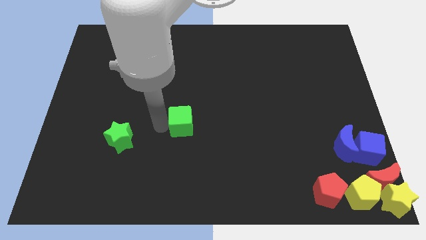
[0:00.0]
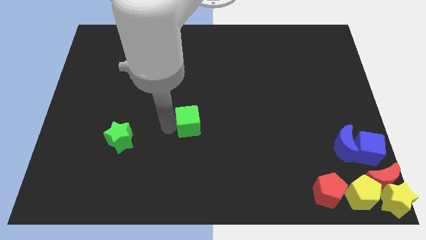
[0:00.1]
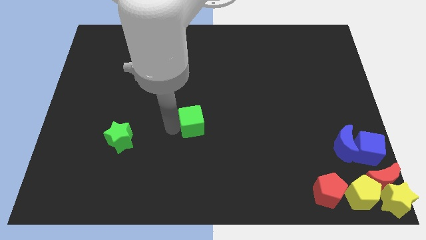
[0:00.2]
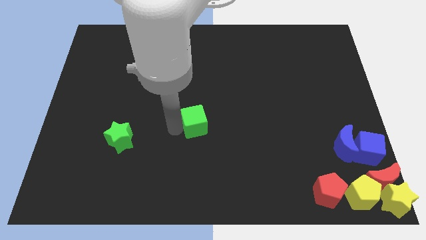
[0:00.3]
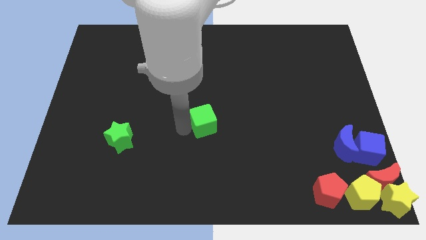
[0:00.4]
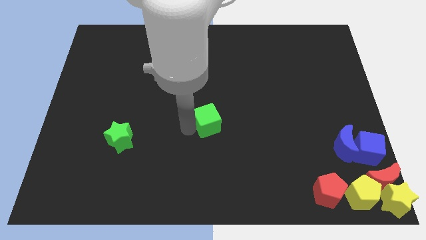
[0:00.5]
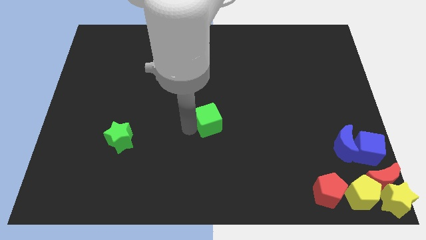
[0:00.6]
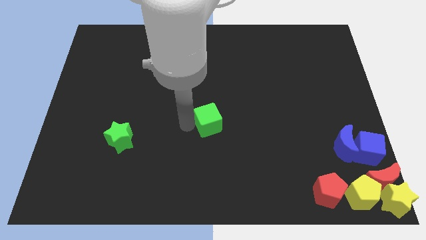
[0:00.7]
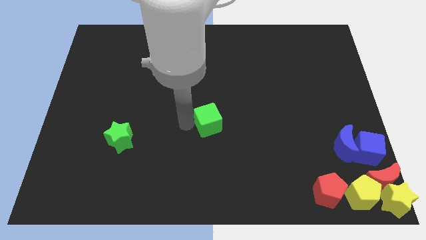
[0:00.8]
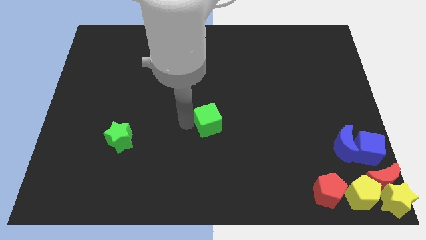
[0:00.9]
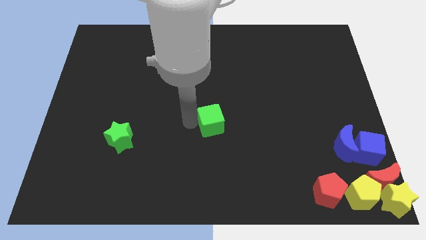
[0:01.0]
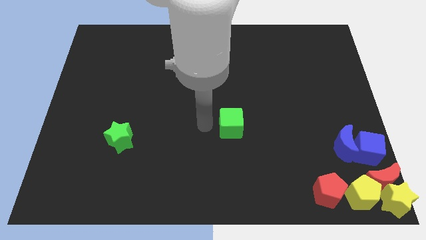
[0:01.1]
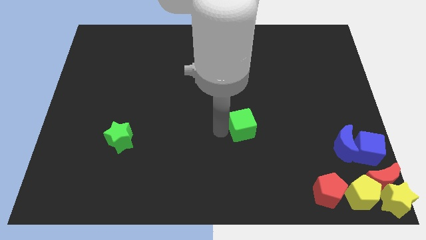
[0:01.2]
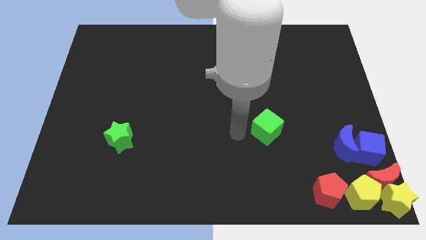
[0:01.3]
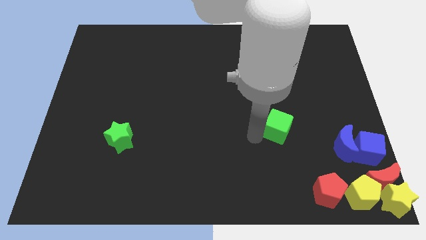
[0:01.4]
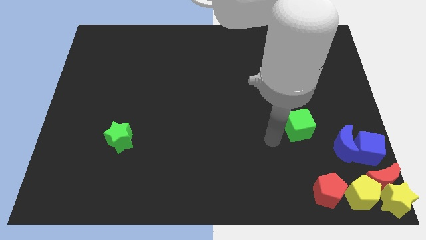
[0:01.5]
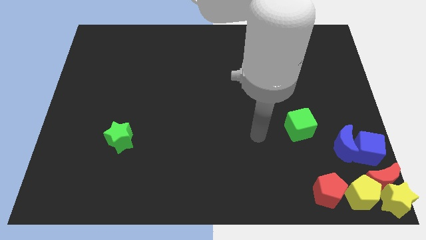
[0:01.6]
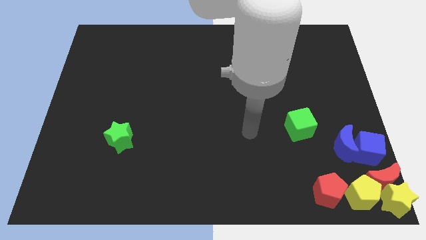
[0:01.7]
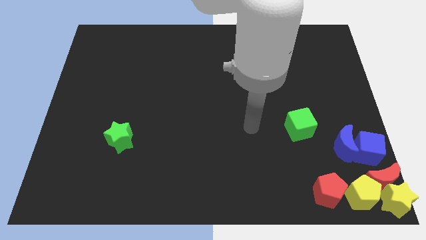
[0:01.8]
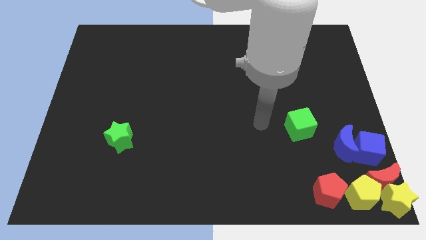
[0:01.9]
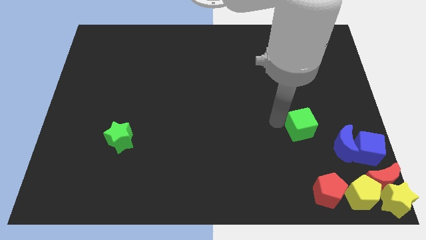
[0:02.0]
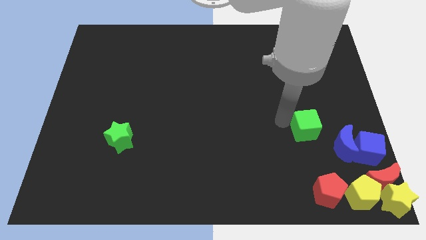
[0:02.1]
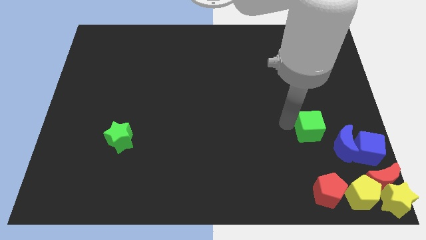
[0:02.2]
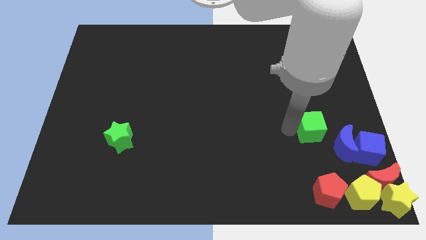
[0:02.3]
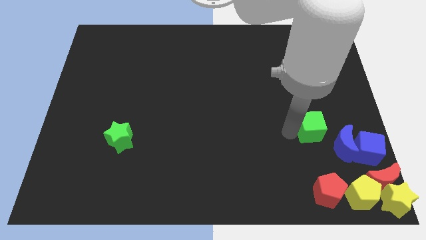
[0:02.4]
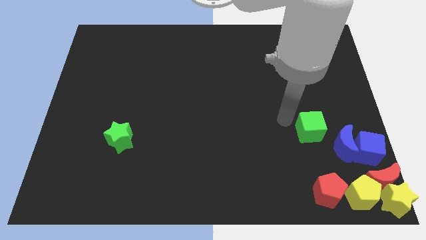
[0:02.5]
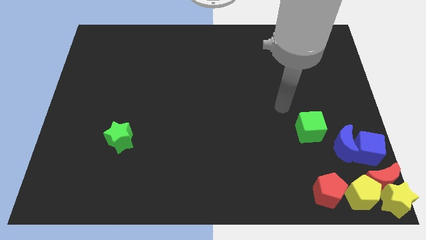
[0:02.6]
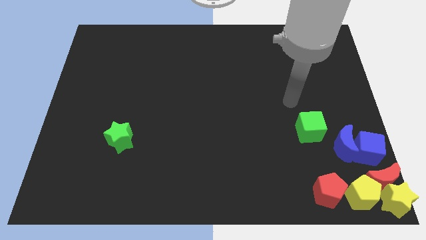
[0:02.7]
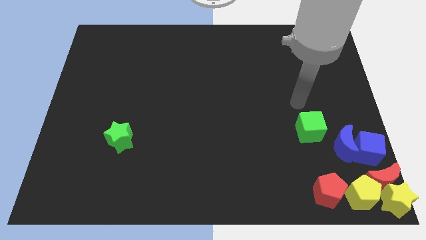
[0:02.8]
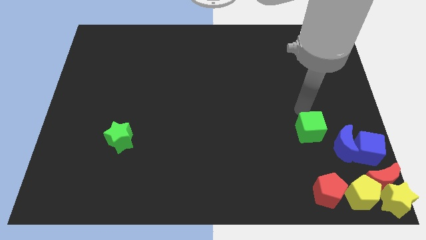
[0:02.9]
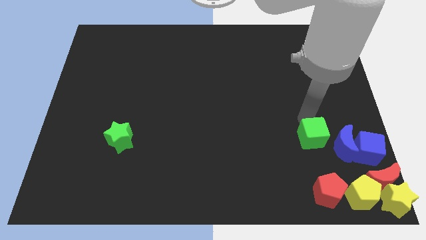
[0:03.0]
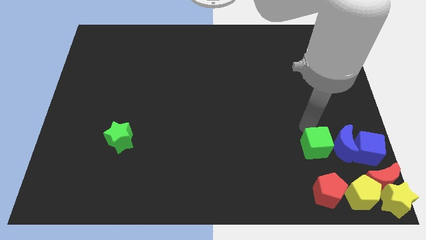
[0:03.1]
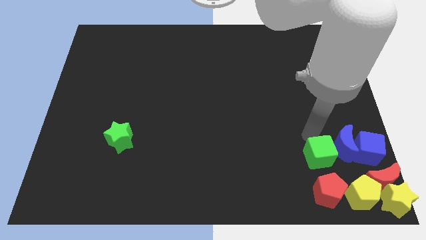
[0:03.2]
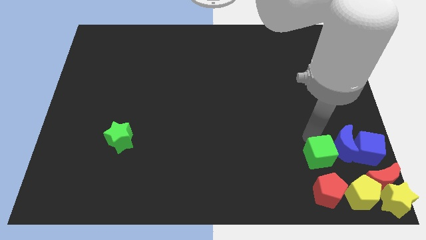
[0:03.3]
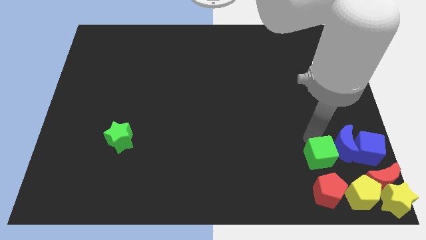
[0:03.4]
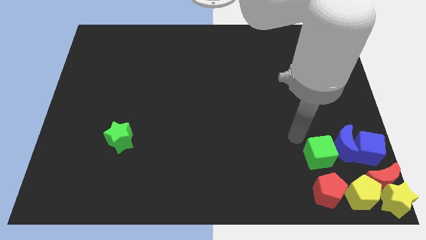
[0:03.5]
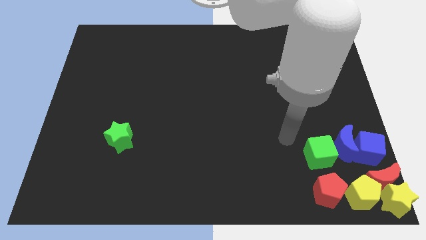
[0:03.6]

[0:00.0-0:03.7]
place the green cube to the top of the red pentagon

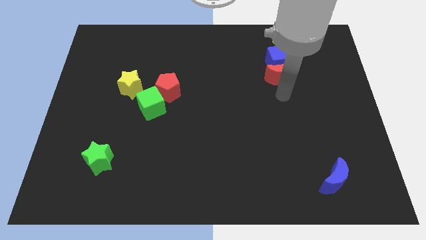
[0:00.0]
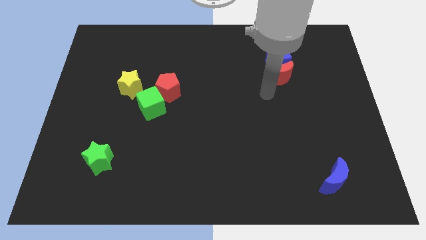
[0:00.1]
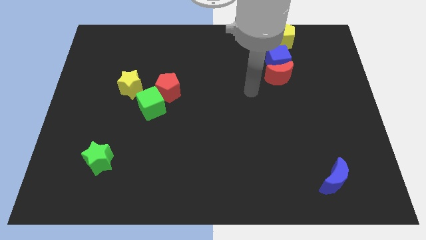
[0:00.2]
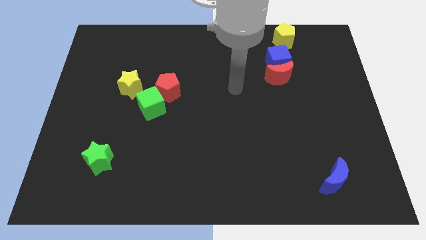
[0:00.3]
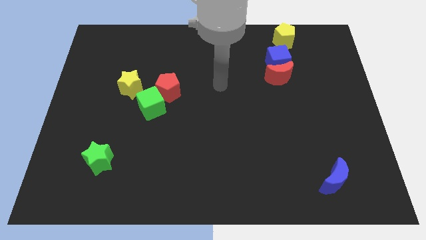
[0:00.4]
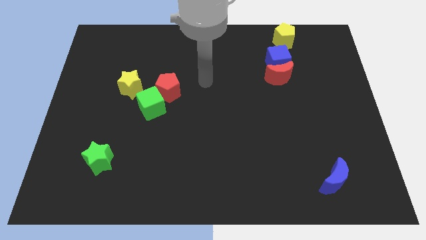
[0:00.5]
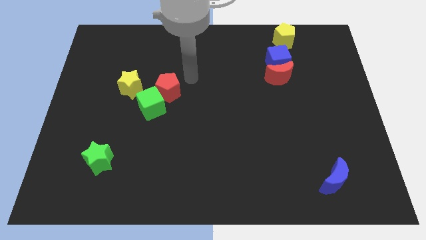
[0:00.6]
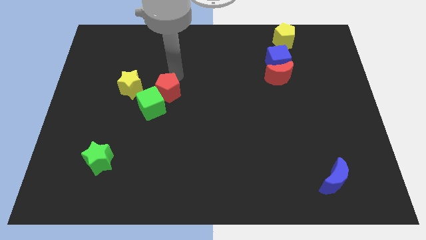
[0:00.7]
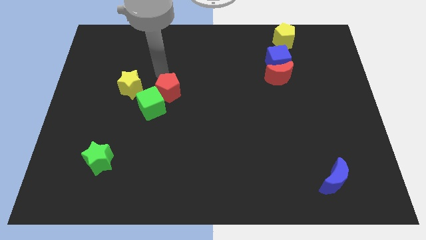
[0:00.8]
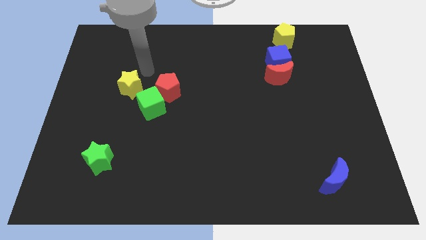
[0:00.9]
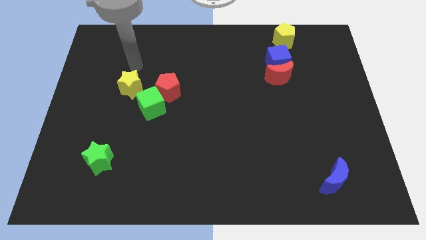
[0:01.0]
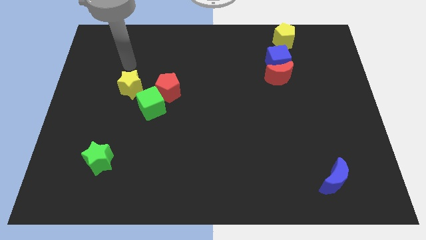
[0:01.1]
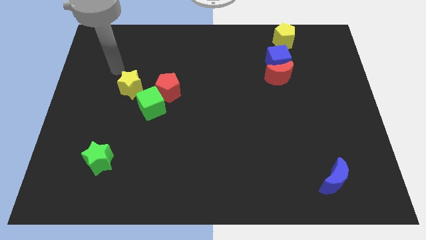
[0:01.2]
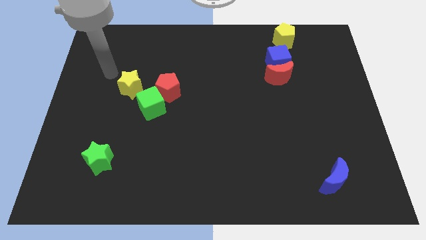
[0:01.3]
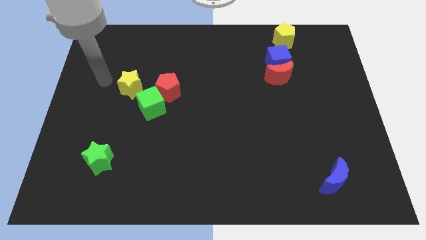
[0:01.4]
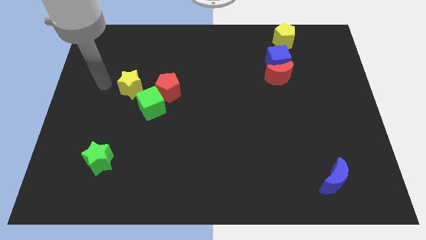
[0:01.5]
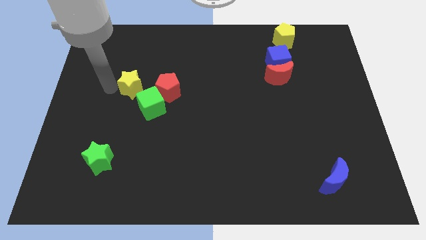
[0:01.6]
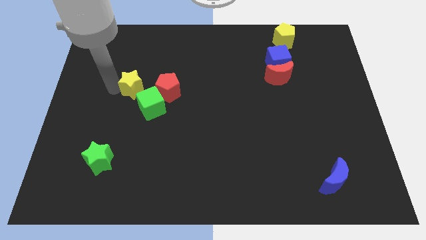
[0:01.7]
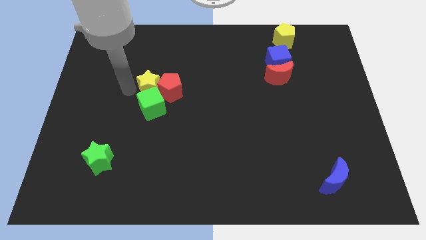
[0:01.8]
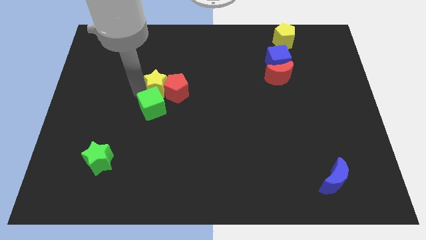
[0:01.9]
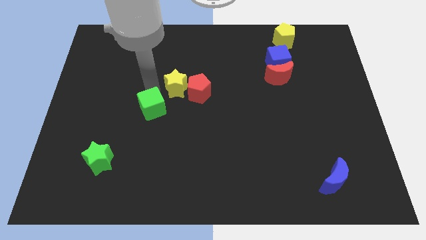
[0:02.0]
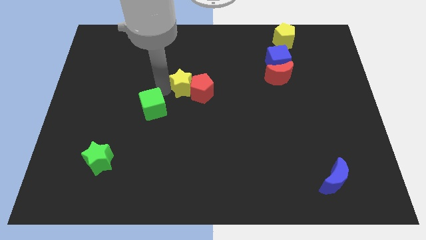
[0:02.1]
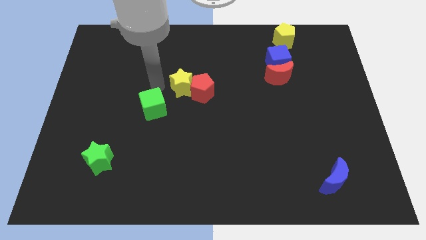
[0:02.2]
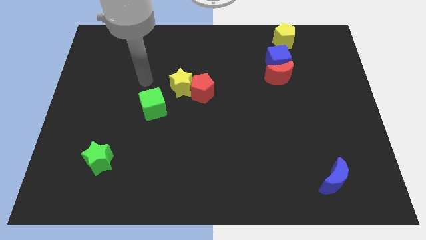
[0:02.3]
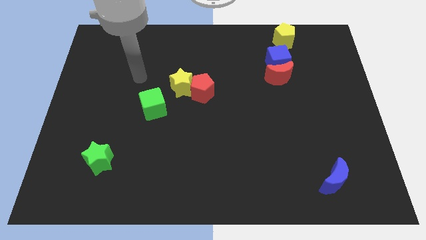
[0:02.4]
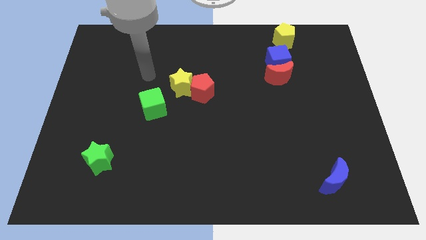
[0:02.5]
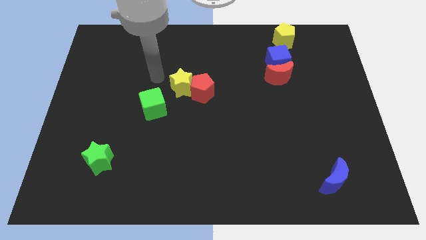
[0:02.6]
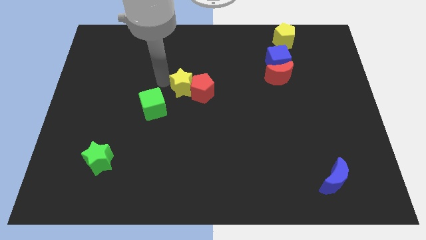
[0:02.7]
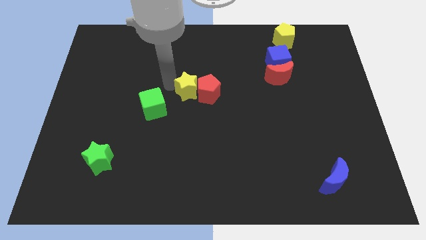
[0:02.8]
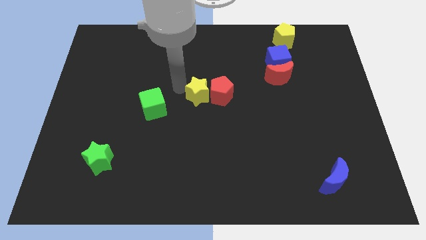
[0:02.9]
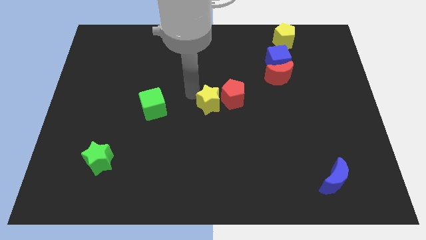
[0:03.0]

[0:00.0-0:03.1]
place the yellow star right to the green cube

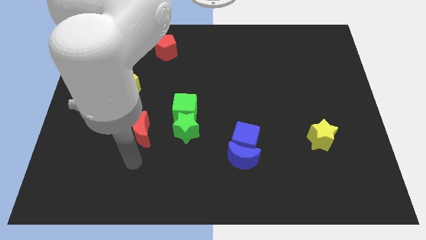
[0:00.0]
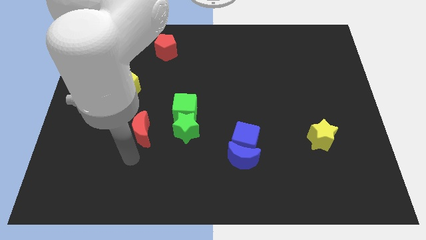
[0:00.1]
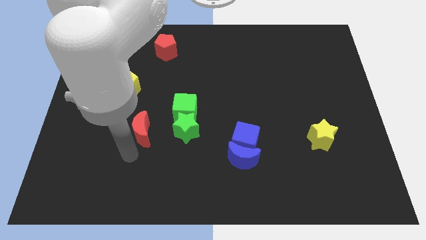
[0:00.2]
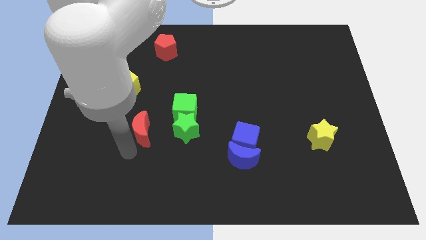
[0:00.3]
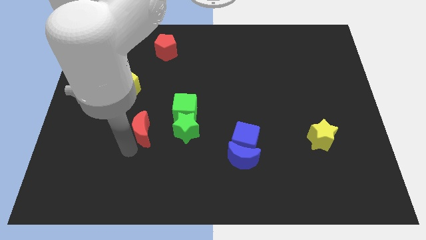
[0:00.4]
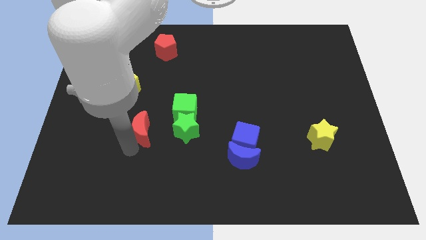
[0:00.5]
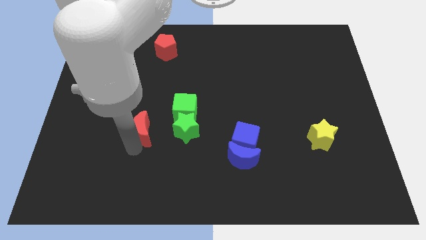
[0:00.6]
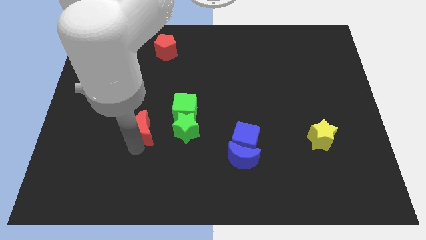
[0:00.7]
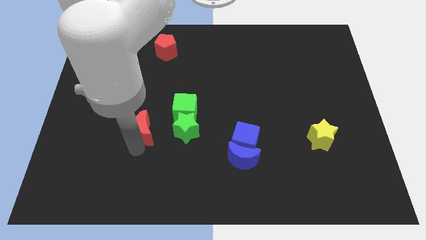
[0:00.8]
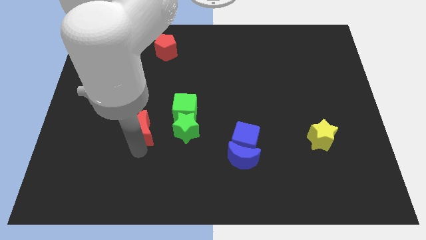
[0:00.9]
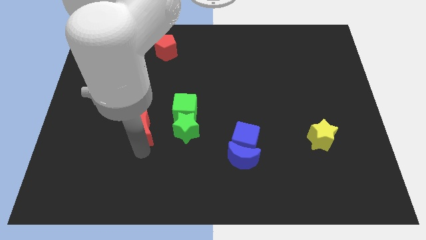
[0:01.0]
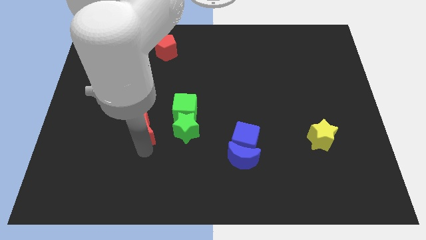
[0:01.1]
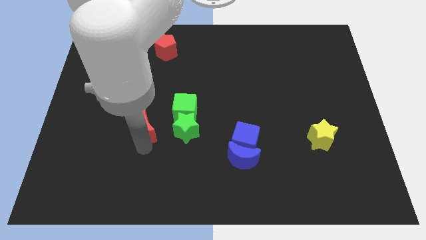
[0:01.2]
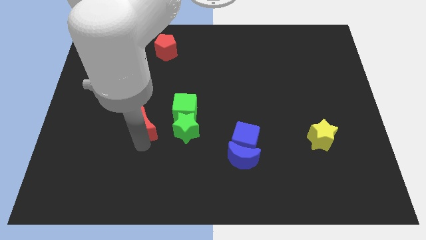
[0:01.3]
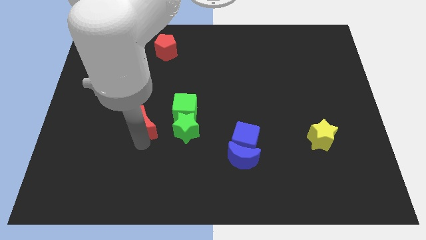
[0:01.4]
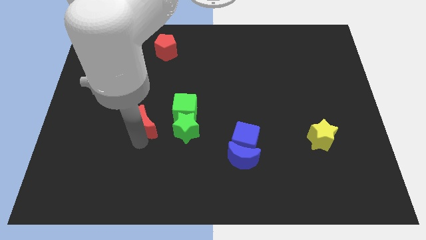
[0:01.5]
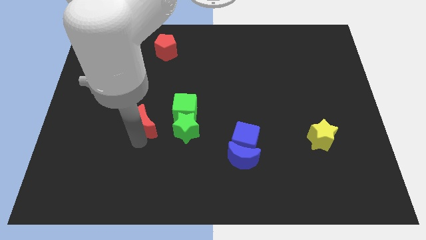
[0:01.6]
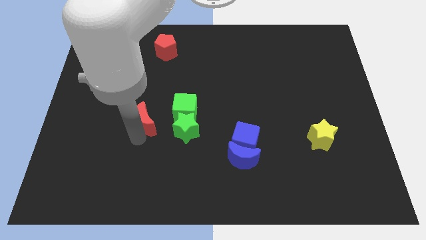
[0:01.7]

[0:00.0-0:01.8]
slightly push the red crescent towards upside

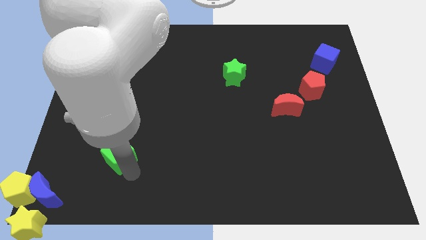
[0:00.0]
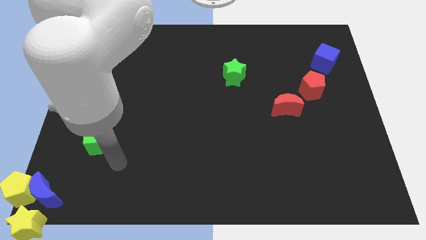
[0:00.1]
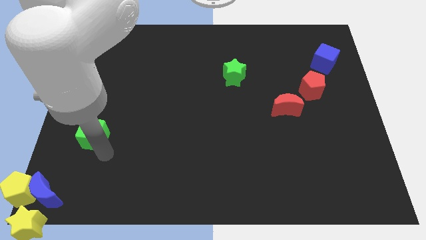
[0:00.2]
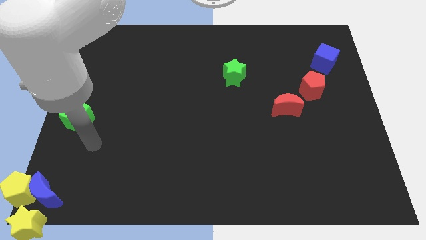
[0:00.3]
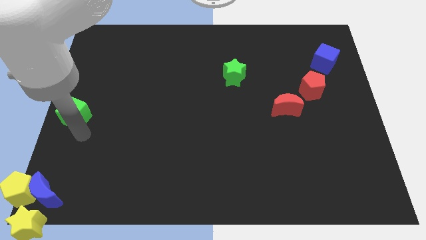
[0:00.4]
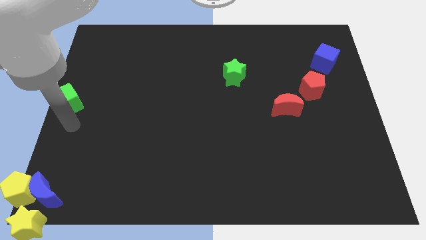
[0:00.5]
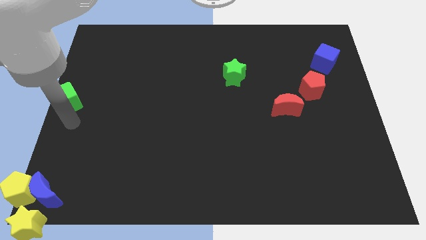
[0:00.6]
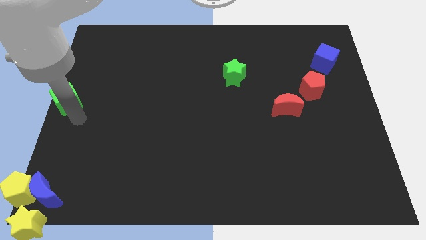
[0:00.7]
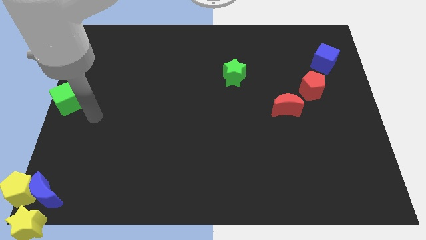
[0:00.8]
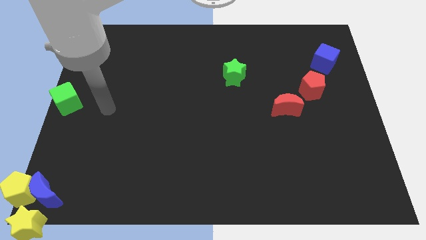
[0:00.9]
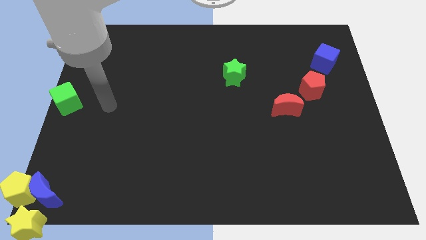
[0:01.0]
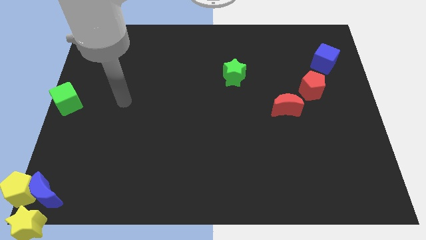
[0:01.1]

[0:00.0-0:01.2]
push the green cube to the left center of the board
